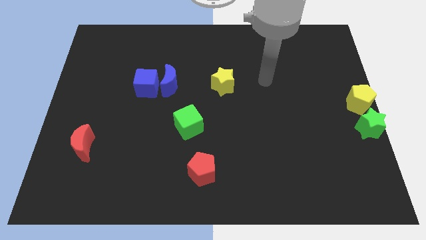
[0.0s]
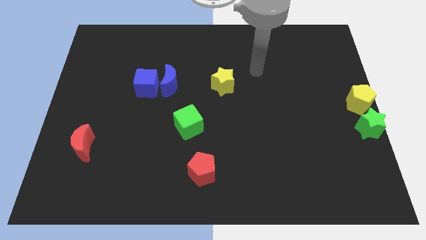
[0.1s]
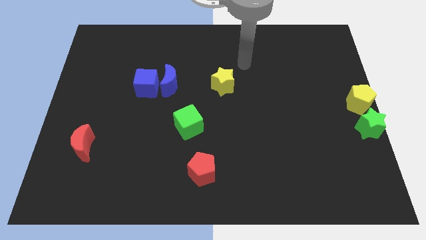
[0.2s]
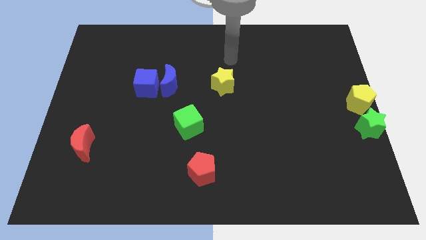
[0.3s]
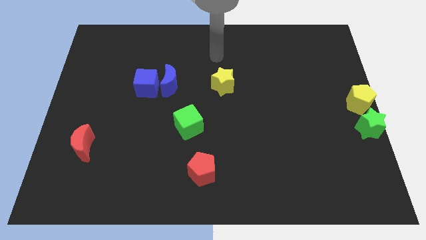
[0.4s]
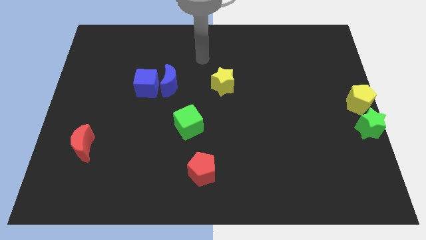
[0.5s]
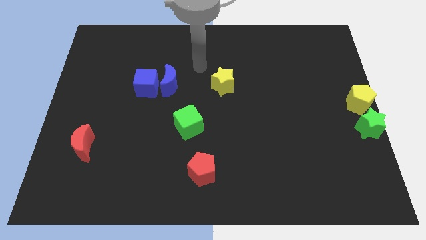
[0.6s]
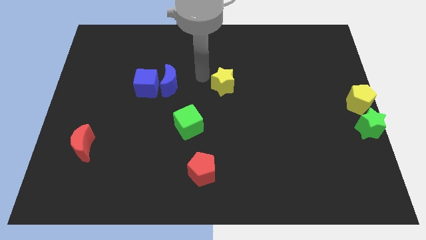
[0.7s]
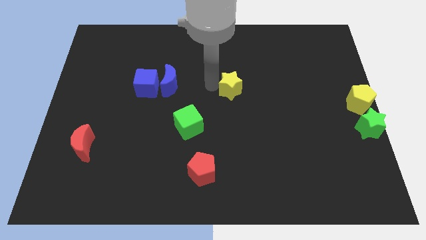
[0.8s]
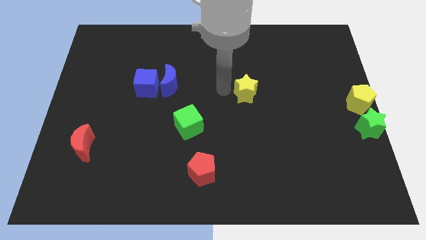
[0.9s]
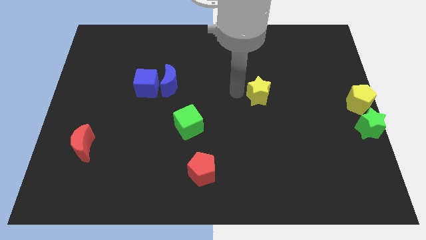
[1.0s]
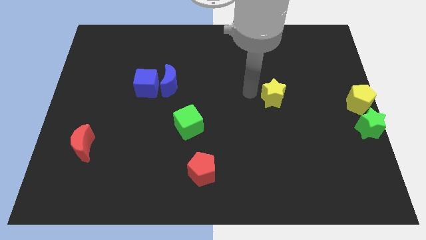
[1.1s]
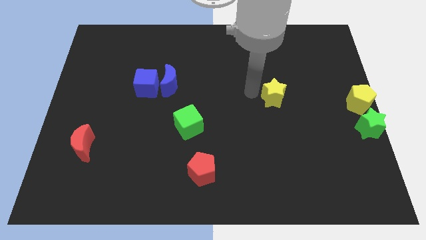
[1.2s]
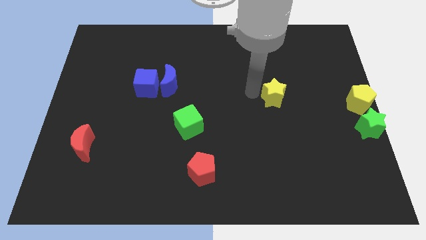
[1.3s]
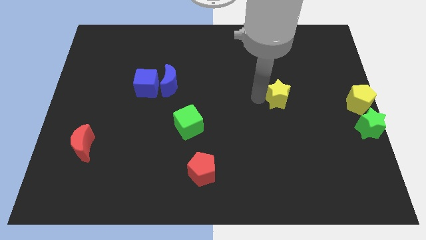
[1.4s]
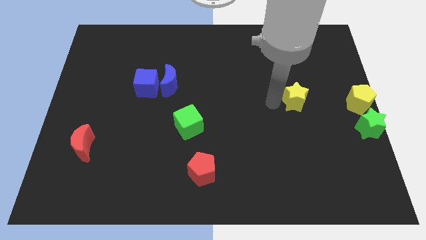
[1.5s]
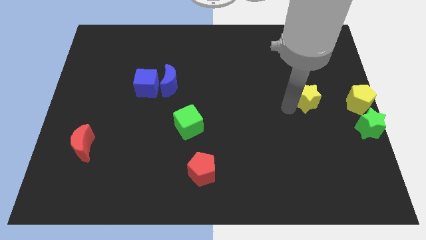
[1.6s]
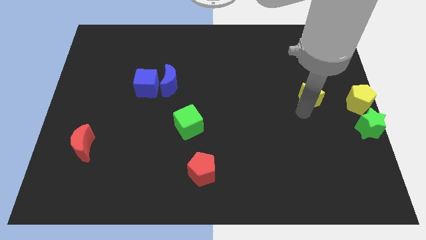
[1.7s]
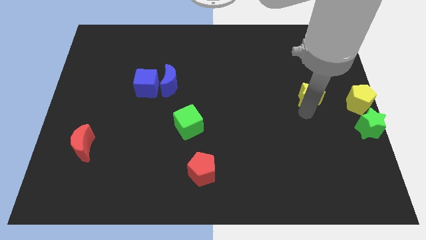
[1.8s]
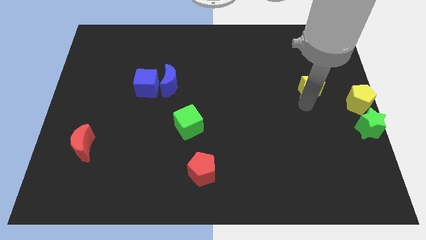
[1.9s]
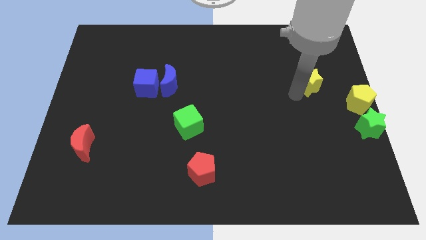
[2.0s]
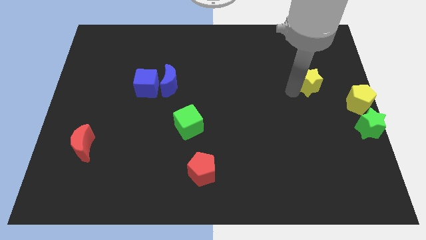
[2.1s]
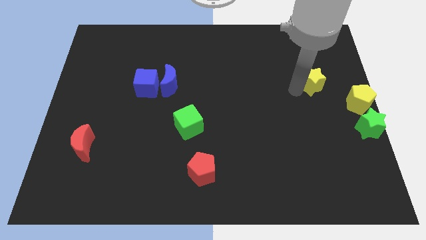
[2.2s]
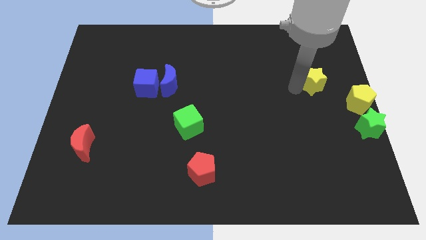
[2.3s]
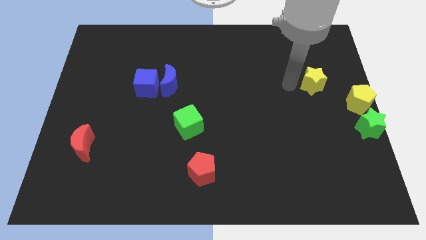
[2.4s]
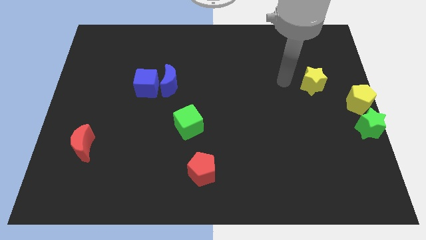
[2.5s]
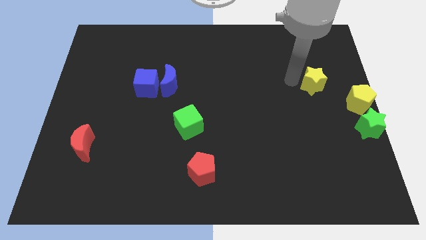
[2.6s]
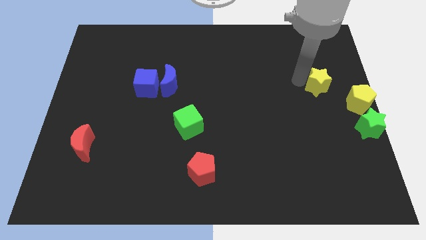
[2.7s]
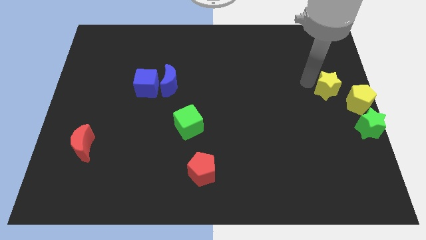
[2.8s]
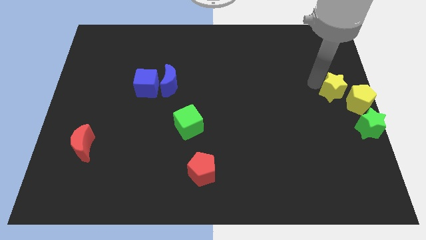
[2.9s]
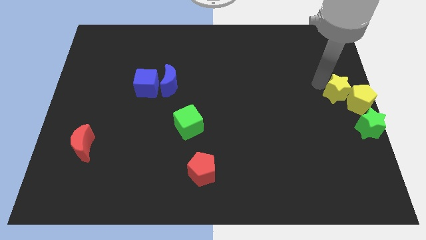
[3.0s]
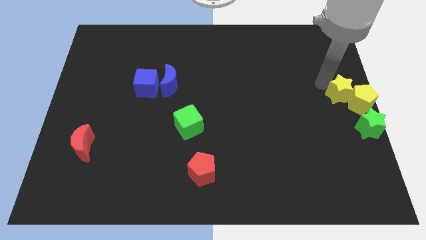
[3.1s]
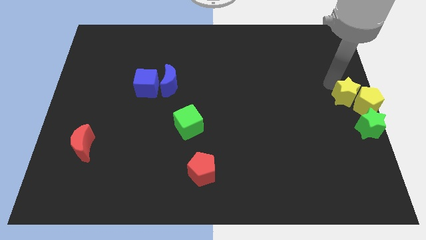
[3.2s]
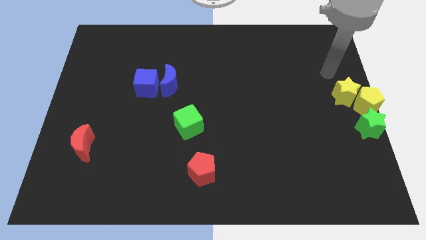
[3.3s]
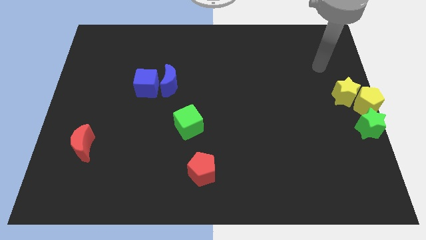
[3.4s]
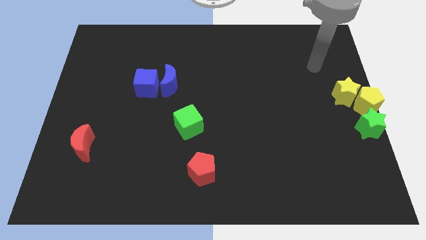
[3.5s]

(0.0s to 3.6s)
push the yellow star into the yellow pentagon

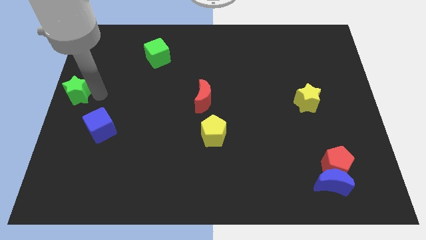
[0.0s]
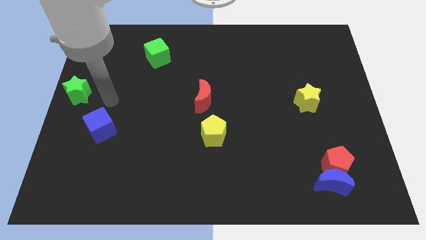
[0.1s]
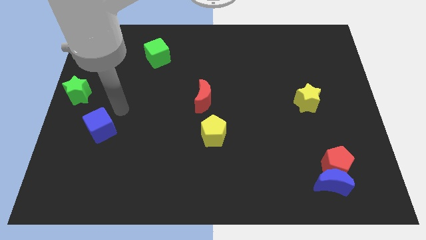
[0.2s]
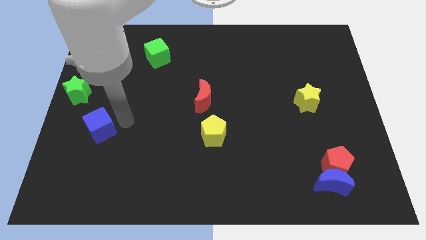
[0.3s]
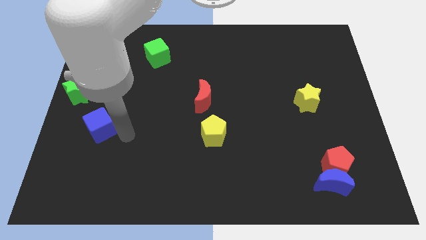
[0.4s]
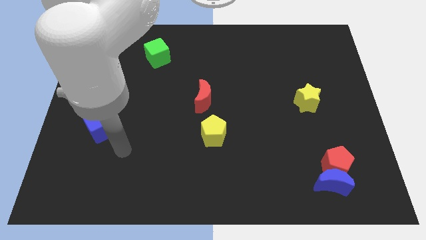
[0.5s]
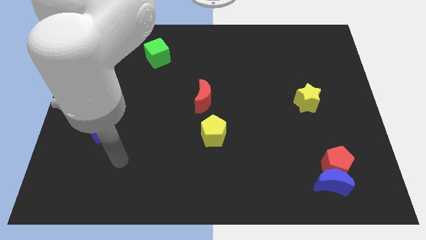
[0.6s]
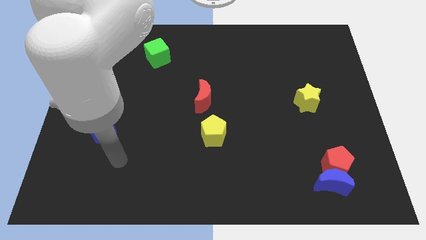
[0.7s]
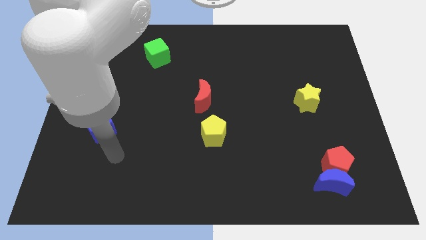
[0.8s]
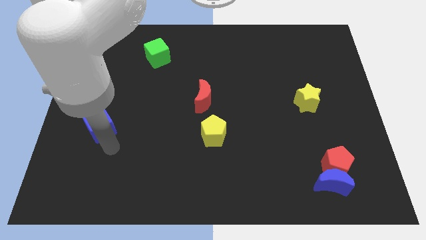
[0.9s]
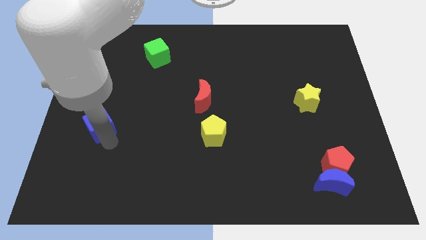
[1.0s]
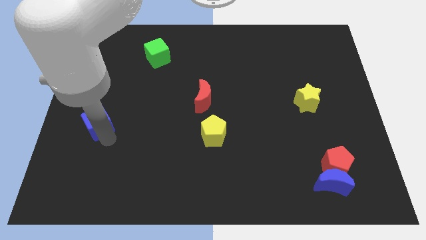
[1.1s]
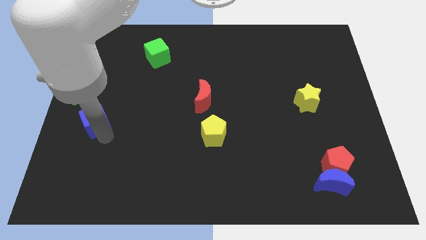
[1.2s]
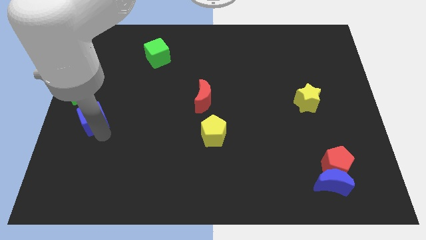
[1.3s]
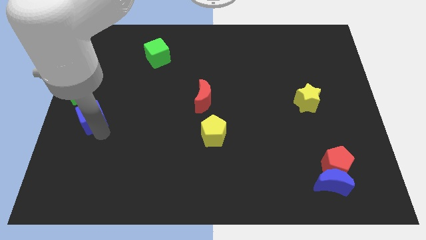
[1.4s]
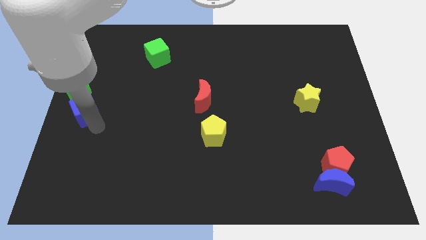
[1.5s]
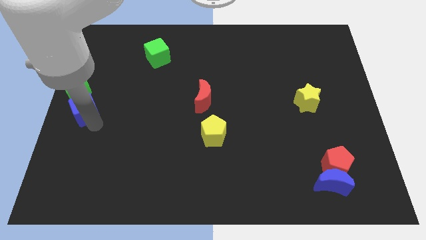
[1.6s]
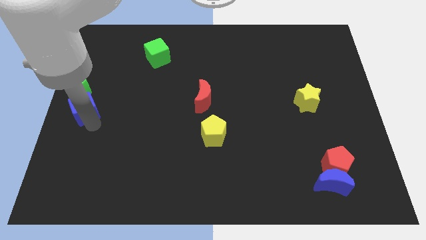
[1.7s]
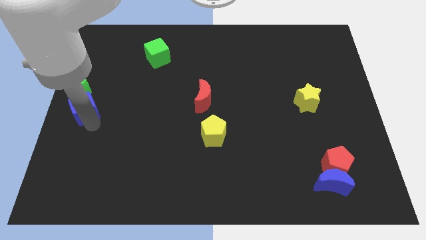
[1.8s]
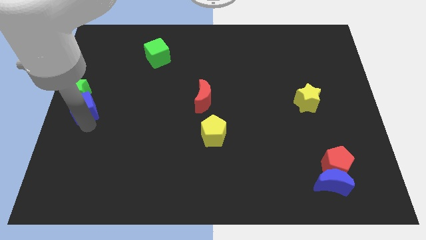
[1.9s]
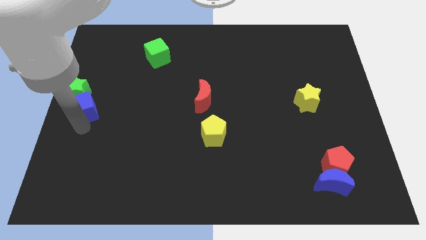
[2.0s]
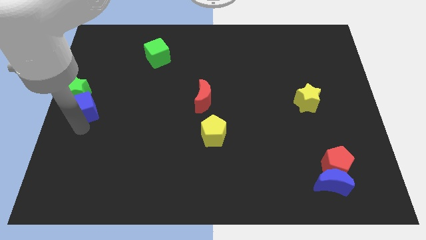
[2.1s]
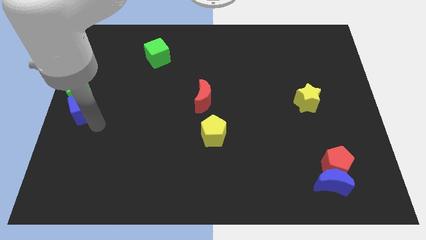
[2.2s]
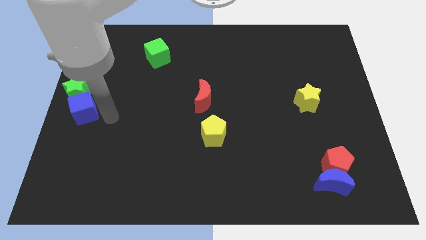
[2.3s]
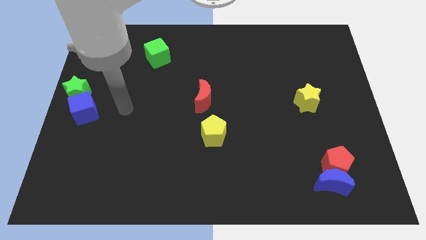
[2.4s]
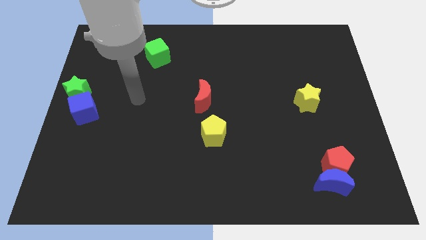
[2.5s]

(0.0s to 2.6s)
push the blue cube into the green star

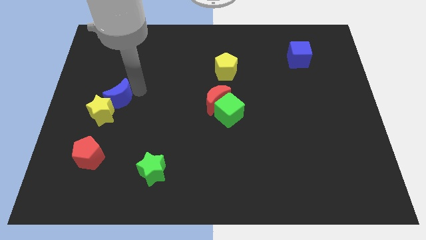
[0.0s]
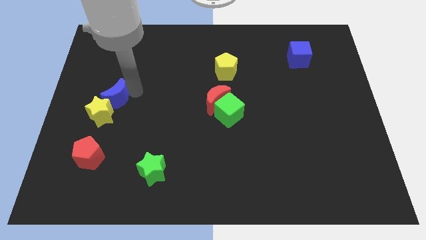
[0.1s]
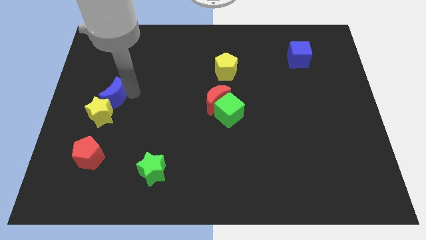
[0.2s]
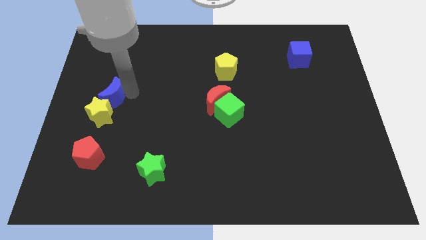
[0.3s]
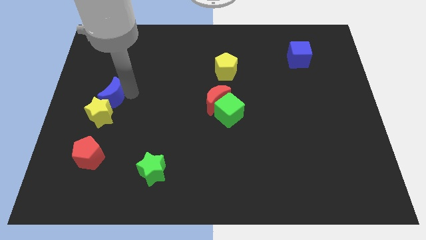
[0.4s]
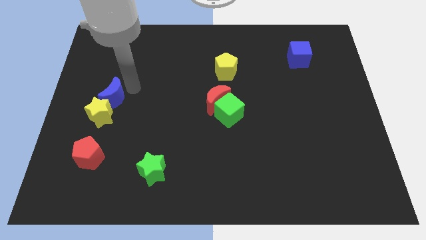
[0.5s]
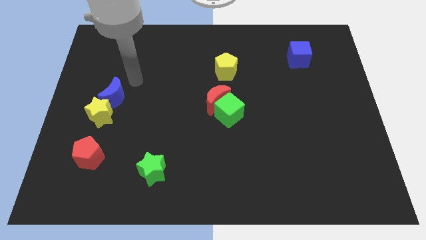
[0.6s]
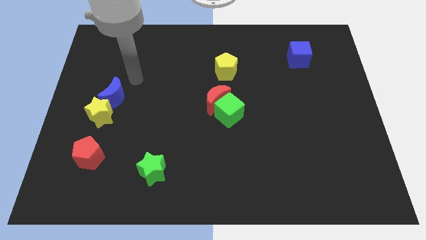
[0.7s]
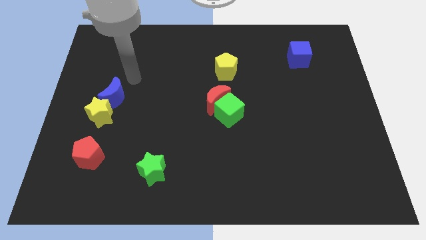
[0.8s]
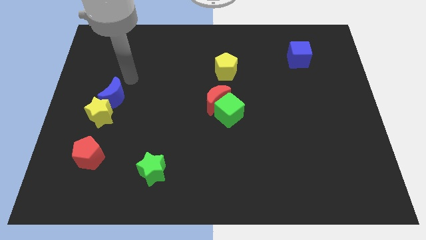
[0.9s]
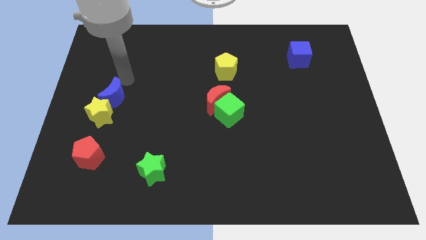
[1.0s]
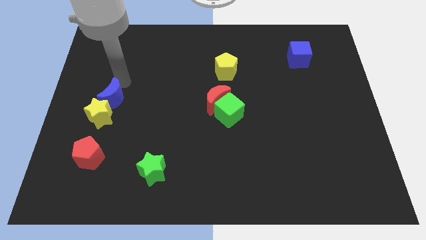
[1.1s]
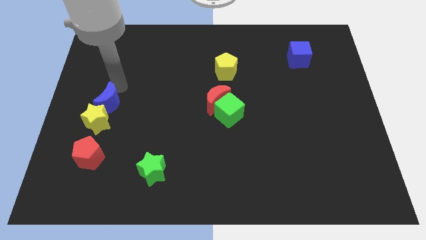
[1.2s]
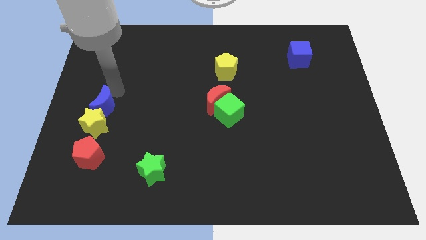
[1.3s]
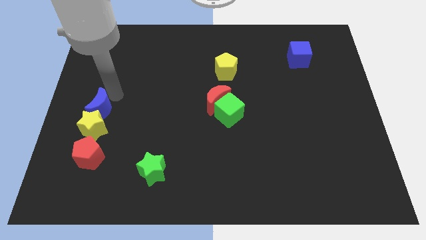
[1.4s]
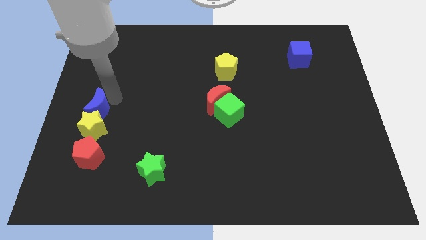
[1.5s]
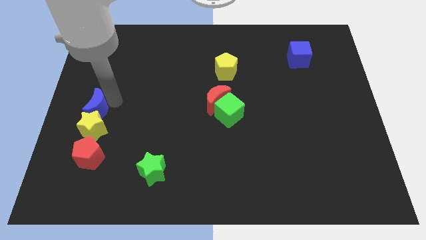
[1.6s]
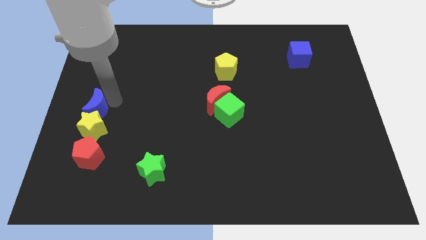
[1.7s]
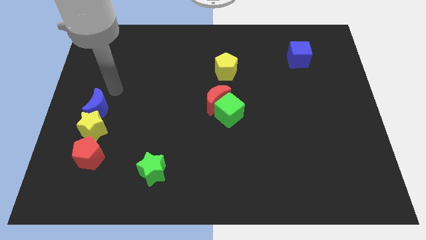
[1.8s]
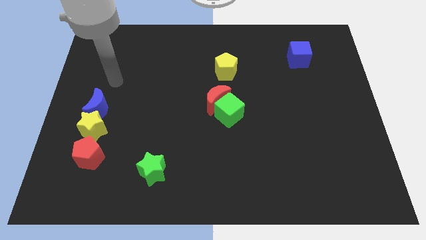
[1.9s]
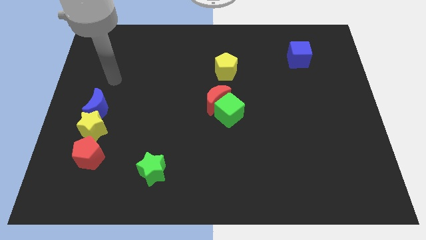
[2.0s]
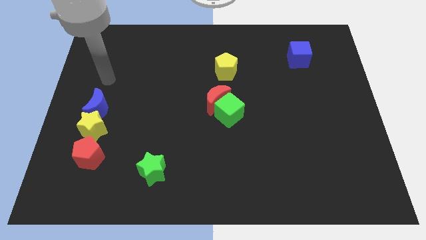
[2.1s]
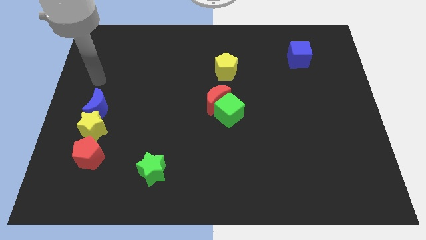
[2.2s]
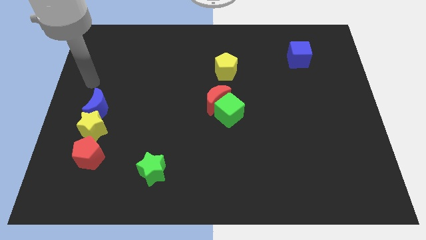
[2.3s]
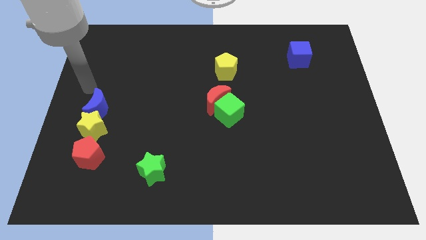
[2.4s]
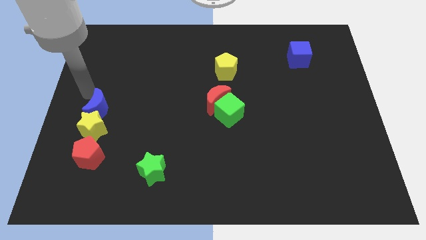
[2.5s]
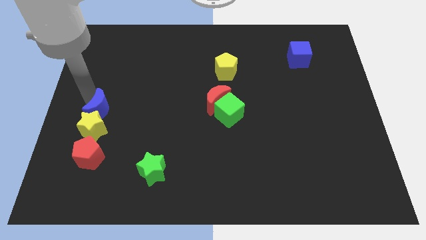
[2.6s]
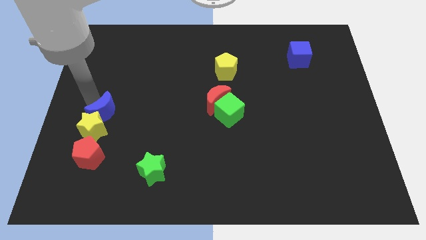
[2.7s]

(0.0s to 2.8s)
put the yellow star and blue moon at the top of red pentagon

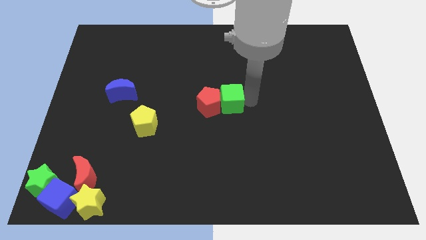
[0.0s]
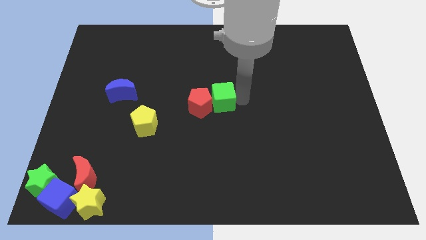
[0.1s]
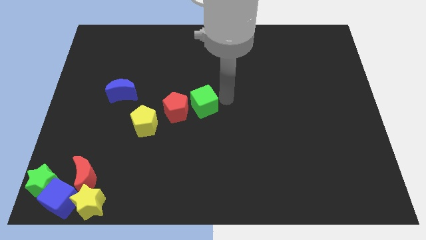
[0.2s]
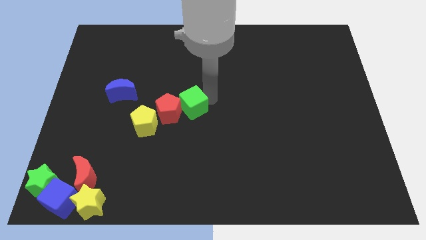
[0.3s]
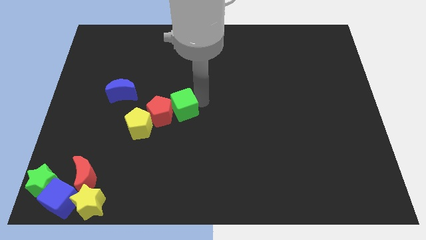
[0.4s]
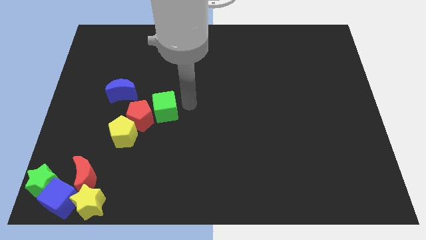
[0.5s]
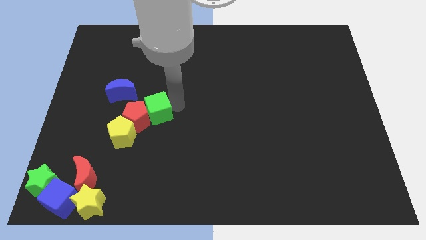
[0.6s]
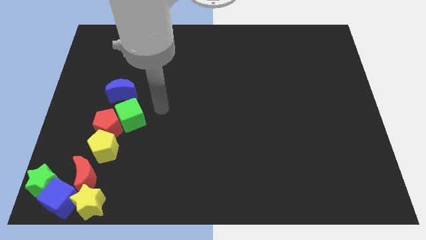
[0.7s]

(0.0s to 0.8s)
move green cube and red pentagon below the blue moon
